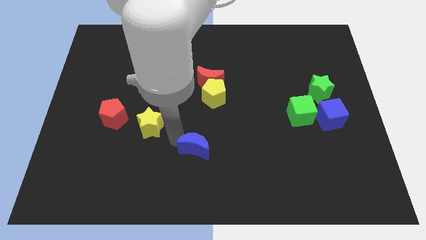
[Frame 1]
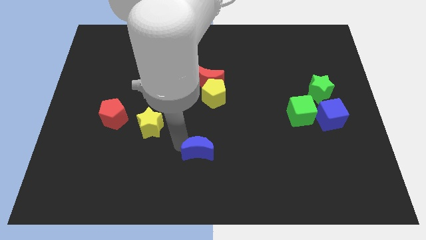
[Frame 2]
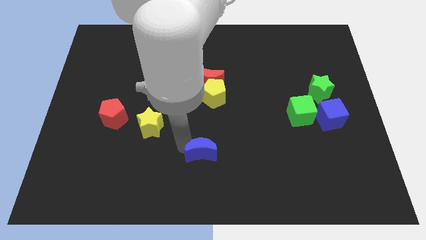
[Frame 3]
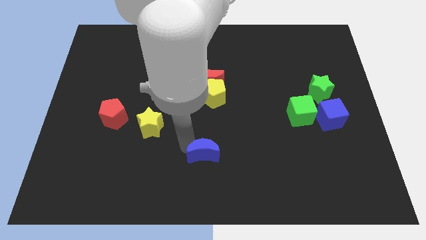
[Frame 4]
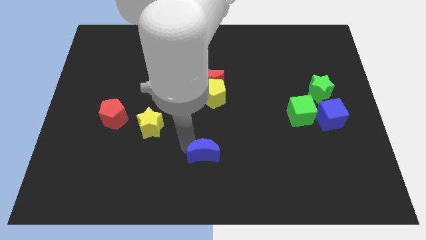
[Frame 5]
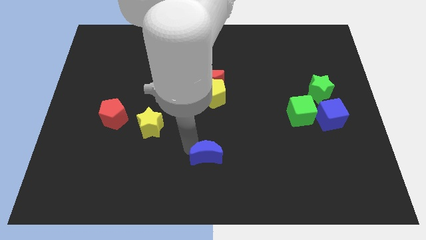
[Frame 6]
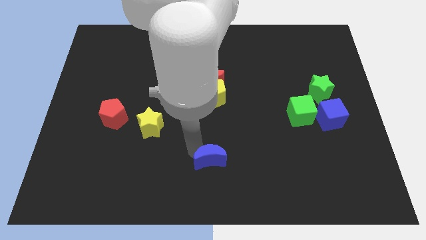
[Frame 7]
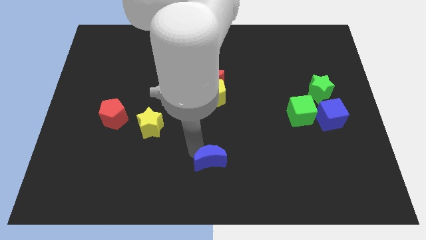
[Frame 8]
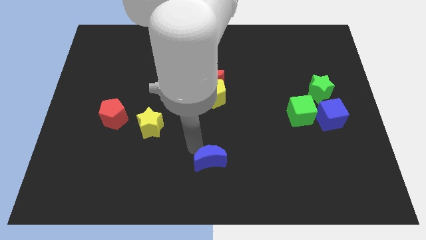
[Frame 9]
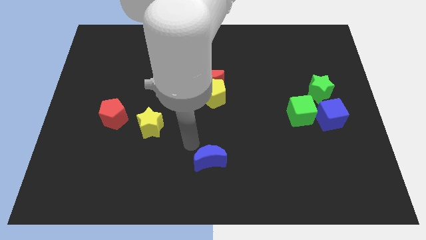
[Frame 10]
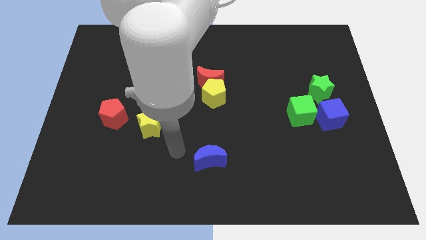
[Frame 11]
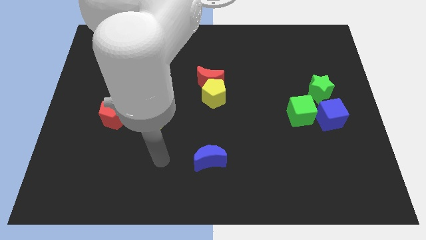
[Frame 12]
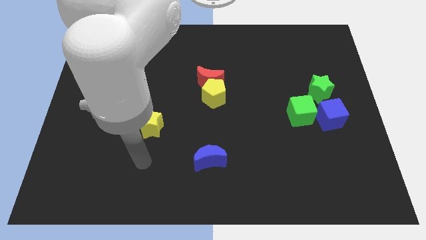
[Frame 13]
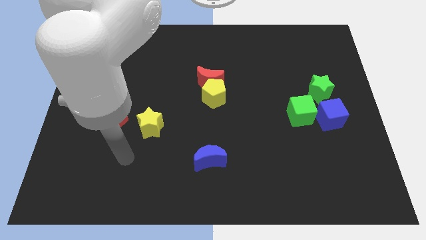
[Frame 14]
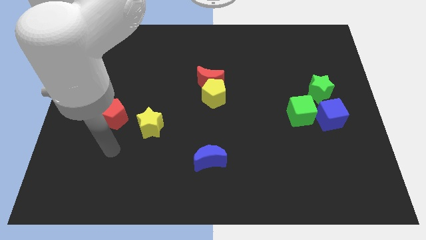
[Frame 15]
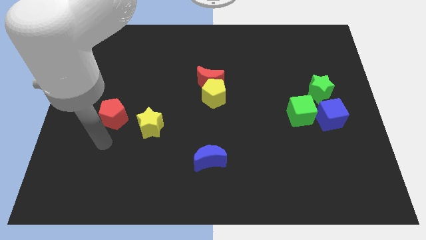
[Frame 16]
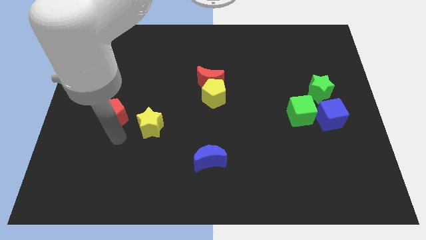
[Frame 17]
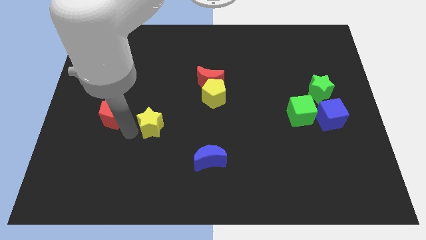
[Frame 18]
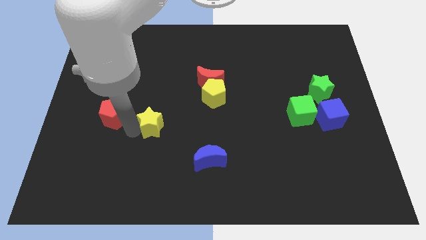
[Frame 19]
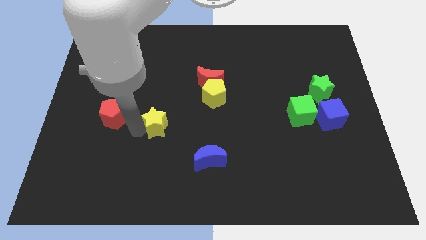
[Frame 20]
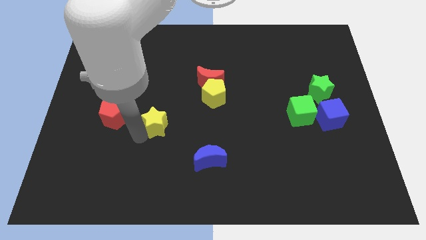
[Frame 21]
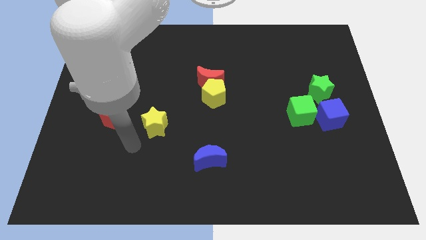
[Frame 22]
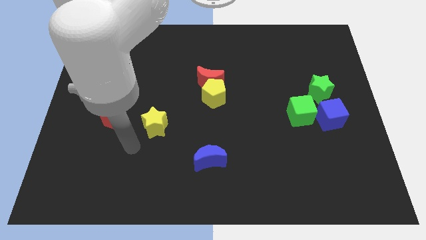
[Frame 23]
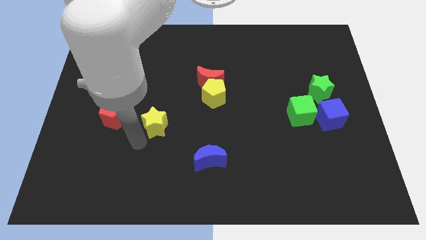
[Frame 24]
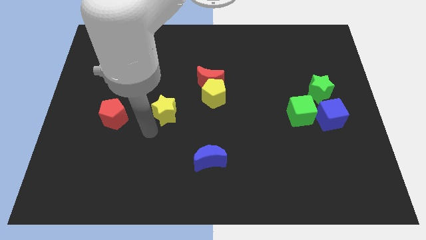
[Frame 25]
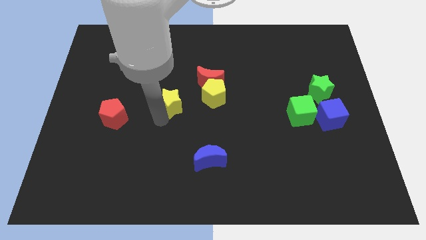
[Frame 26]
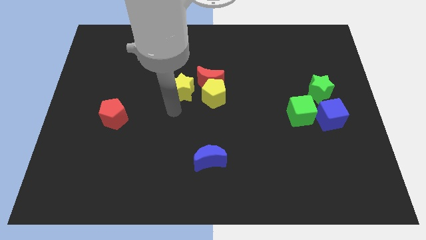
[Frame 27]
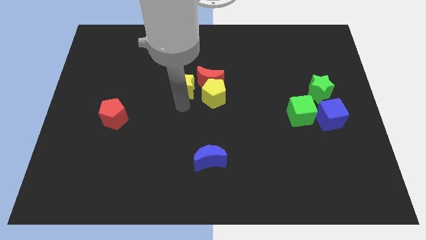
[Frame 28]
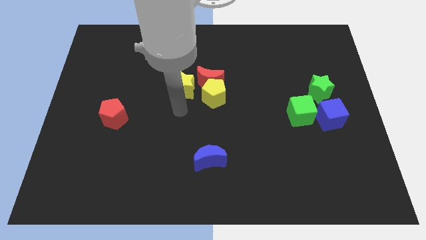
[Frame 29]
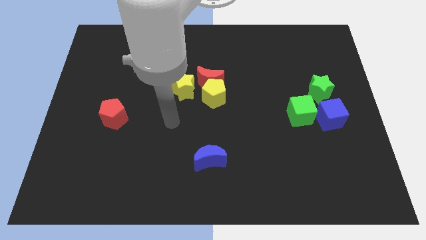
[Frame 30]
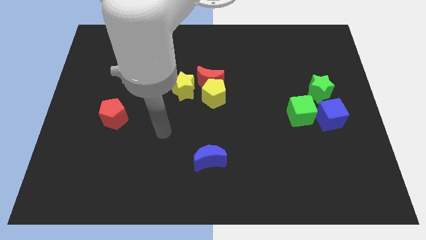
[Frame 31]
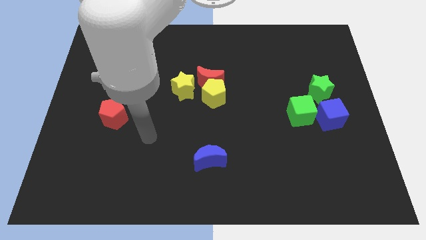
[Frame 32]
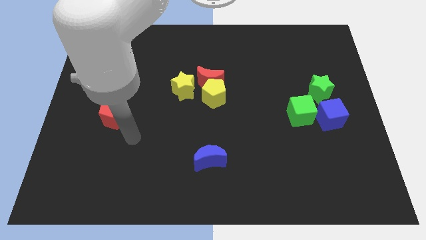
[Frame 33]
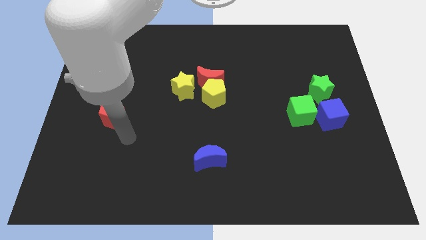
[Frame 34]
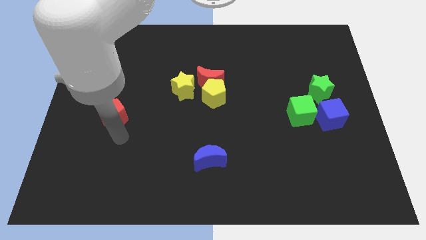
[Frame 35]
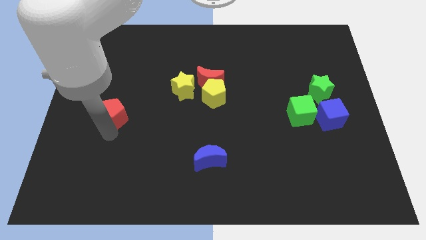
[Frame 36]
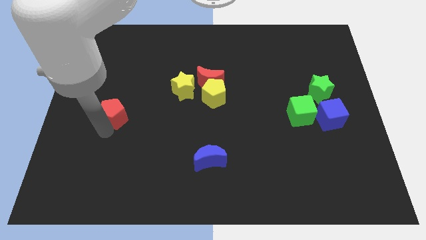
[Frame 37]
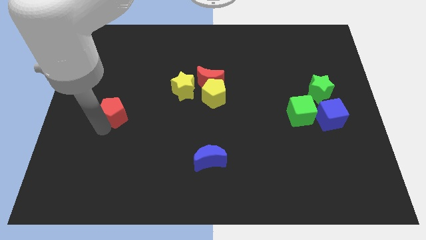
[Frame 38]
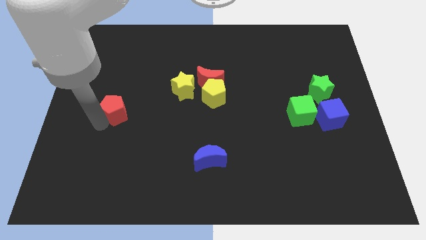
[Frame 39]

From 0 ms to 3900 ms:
move the blue crescent towards the bottom center of the board

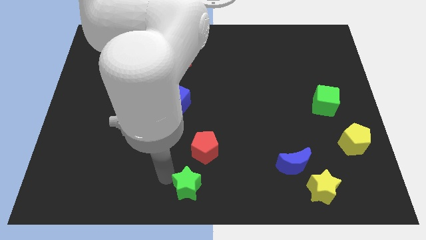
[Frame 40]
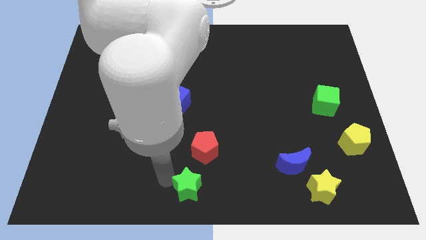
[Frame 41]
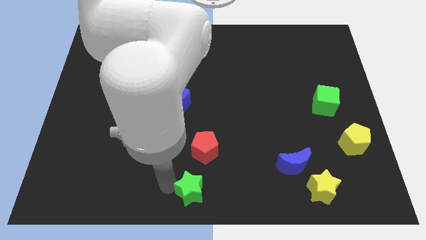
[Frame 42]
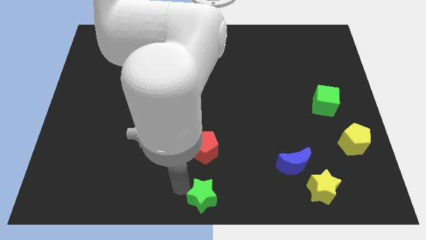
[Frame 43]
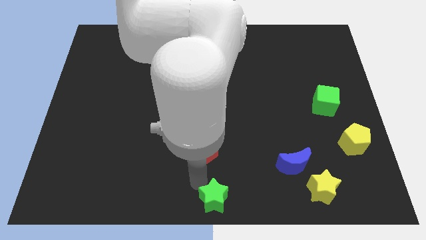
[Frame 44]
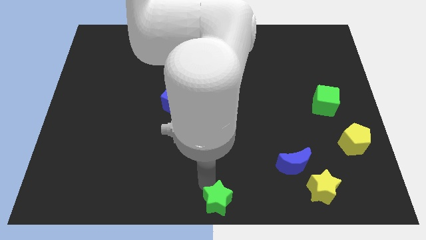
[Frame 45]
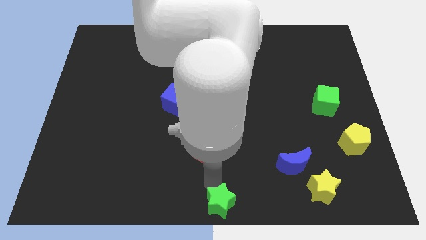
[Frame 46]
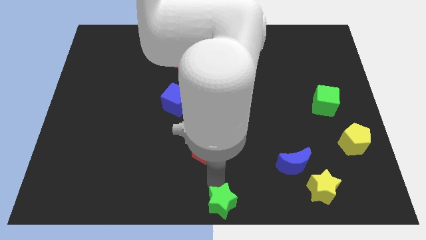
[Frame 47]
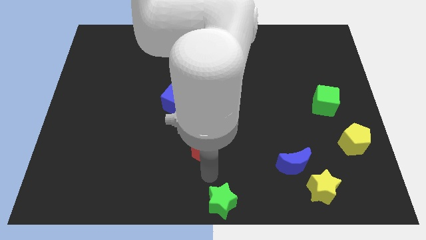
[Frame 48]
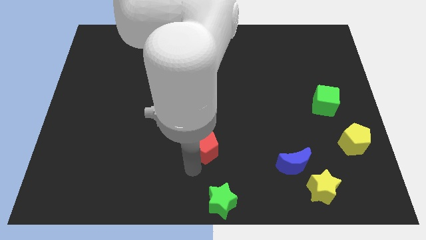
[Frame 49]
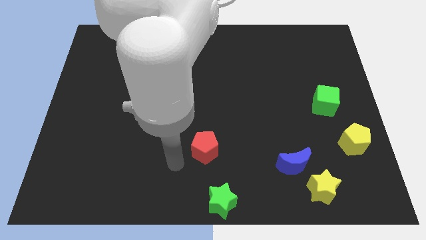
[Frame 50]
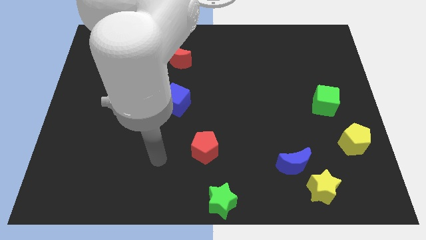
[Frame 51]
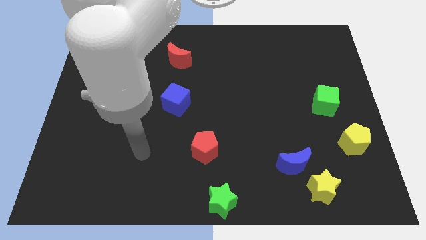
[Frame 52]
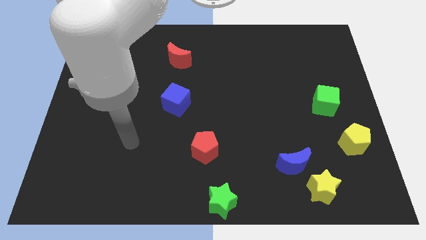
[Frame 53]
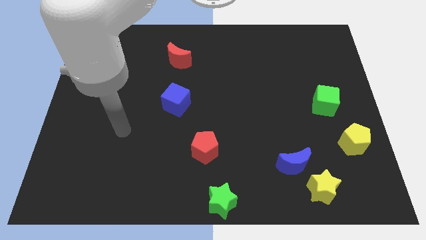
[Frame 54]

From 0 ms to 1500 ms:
place the green star at the bottom center of the board

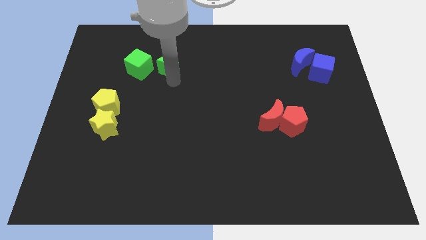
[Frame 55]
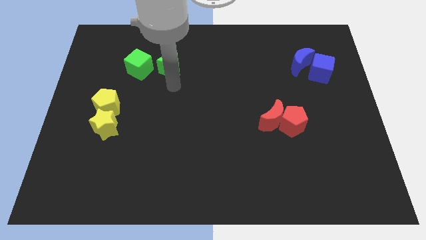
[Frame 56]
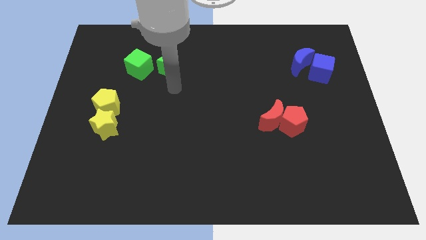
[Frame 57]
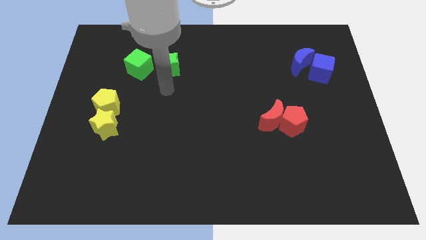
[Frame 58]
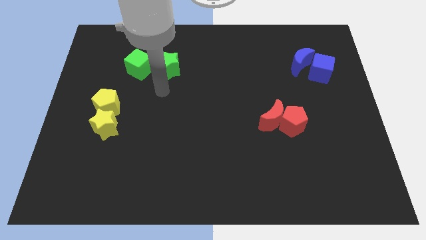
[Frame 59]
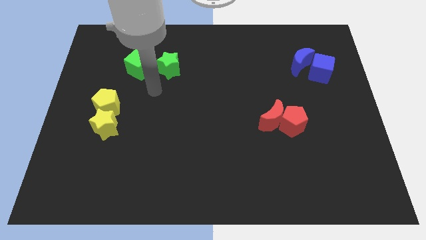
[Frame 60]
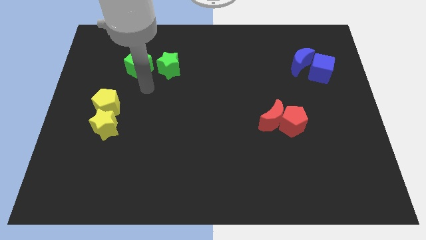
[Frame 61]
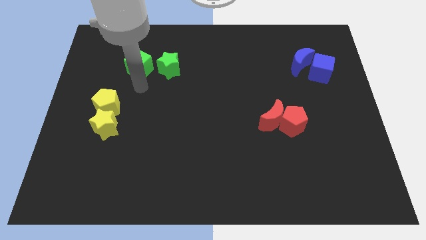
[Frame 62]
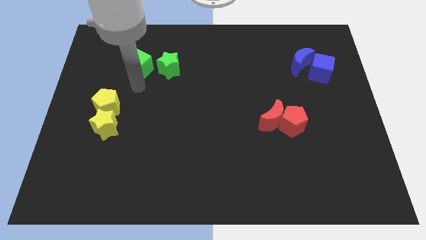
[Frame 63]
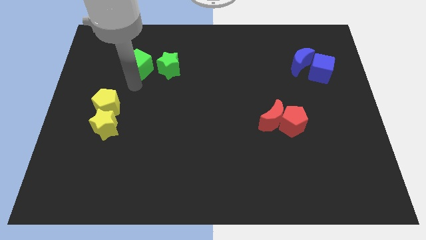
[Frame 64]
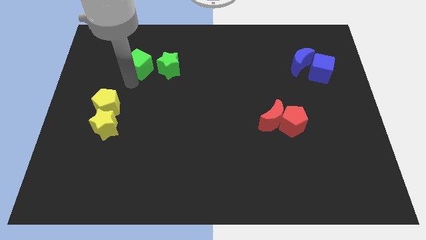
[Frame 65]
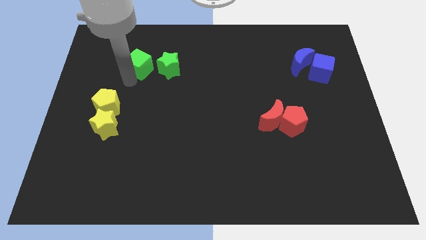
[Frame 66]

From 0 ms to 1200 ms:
move your hand towards the green cube

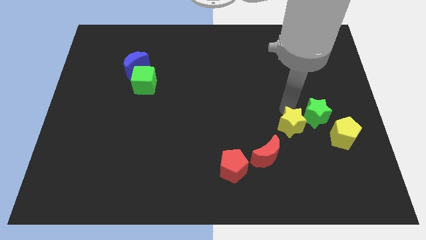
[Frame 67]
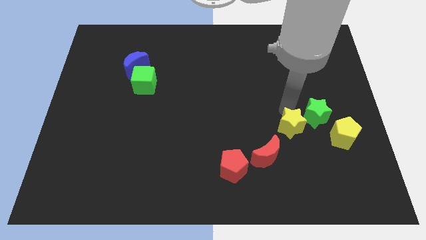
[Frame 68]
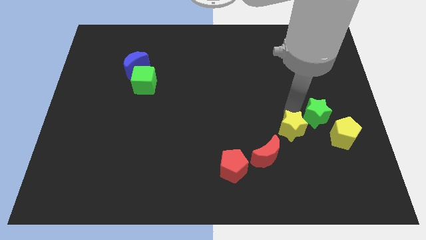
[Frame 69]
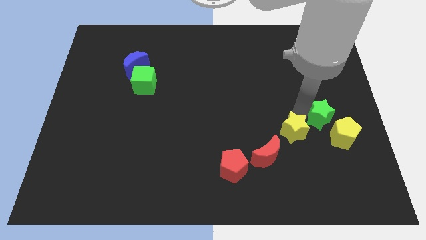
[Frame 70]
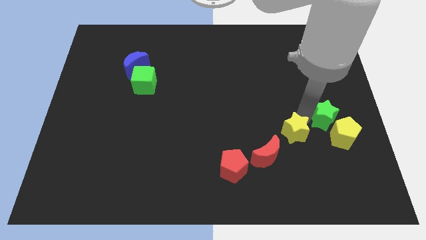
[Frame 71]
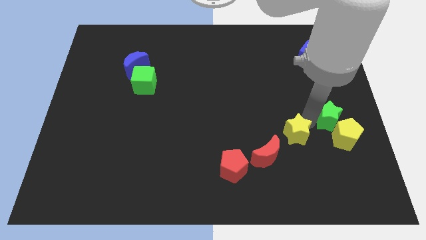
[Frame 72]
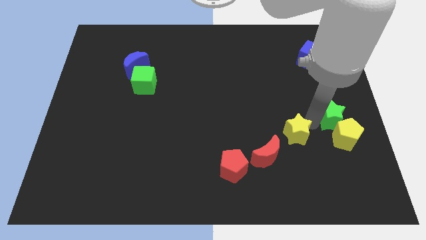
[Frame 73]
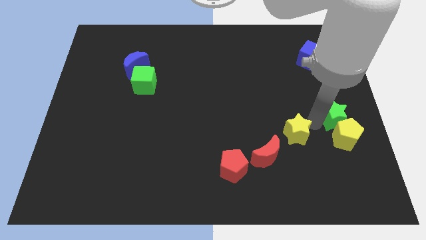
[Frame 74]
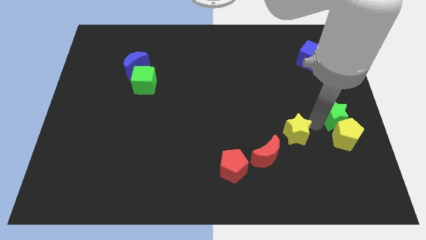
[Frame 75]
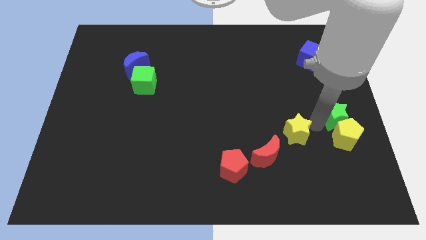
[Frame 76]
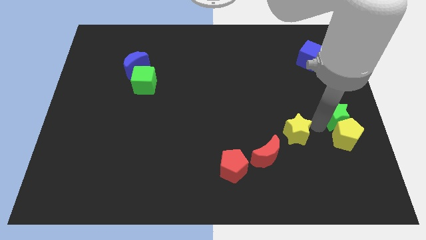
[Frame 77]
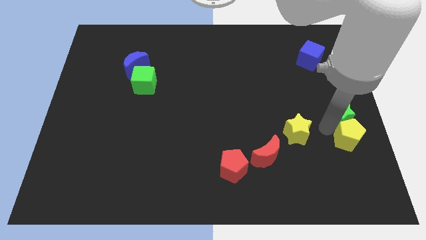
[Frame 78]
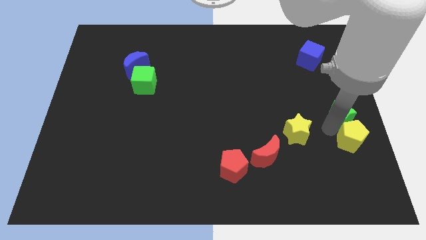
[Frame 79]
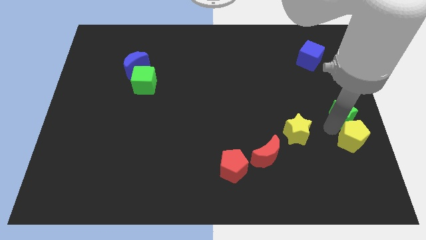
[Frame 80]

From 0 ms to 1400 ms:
separate green star from yellow star

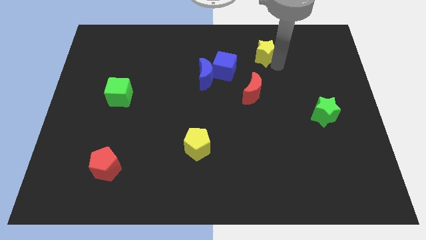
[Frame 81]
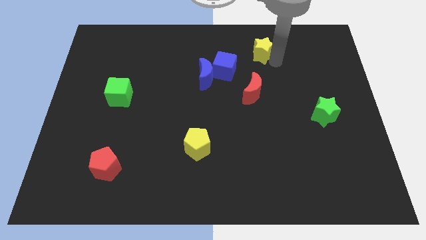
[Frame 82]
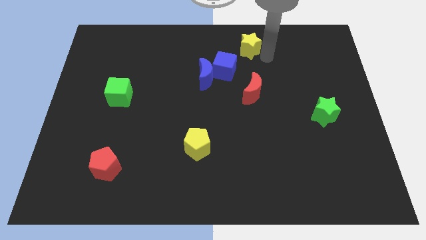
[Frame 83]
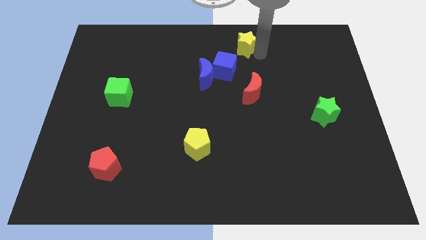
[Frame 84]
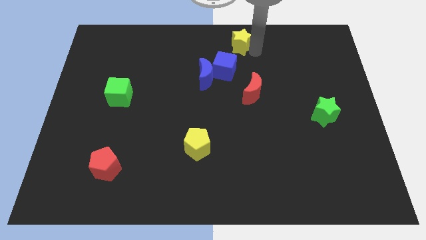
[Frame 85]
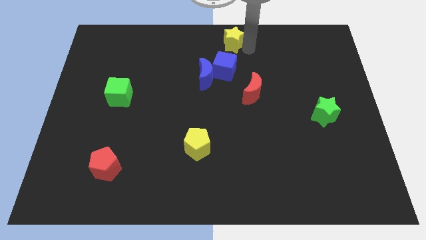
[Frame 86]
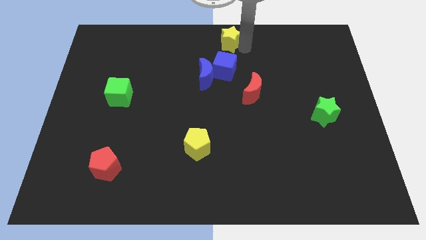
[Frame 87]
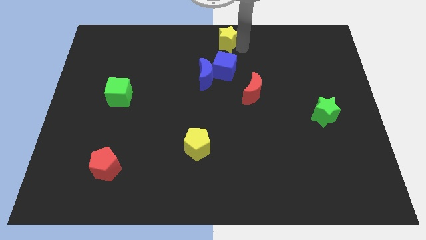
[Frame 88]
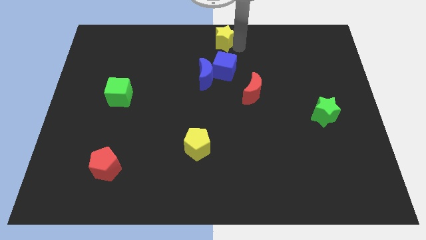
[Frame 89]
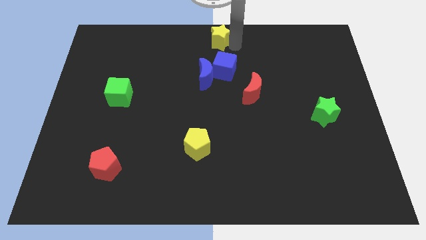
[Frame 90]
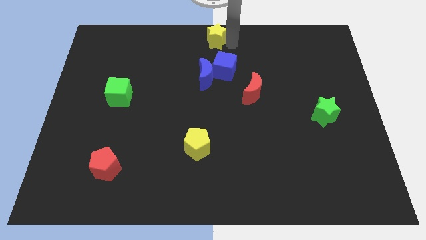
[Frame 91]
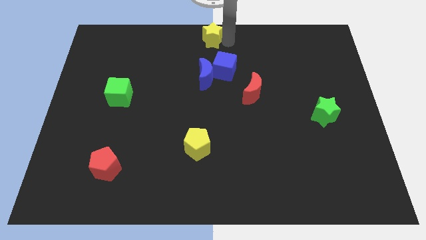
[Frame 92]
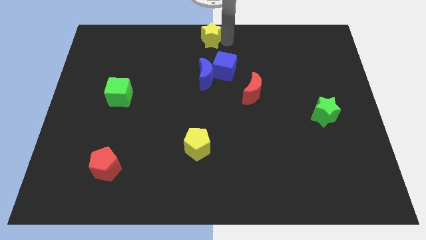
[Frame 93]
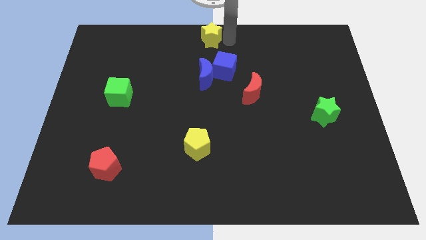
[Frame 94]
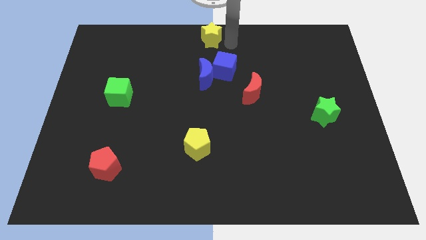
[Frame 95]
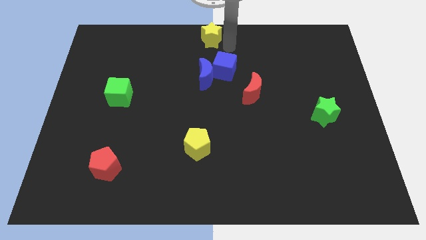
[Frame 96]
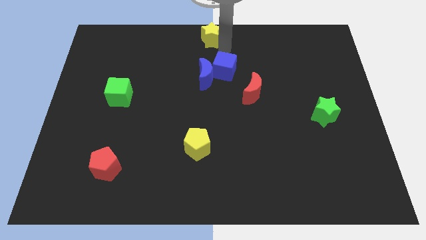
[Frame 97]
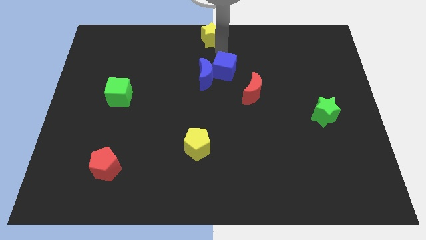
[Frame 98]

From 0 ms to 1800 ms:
move the yellow star to the top center of the board
